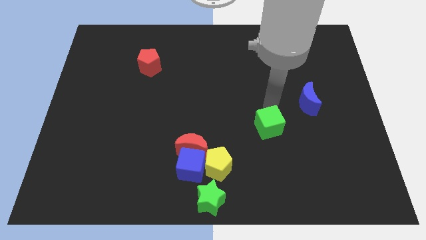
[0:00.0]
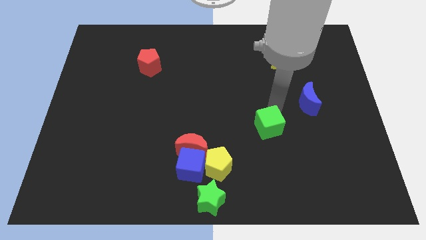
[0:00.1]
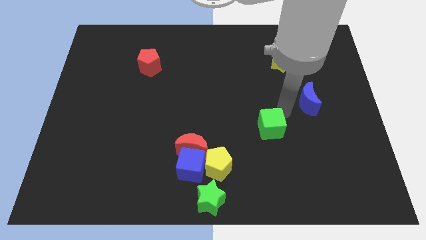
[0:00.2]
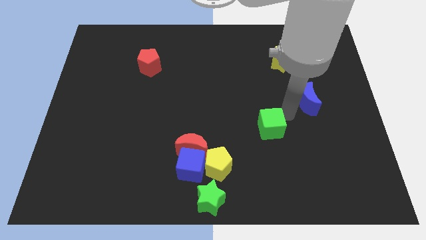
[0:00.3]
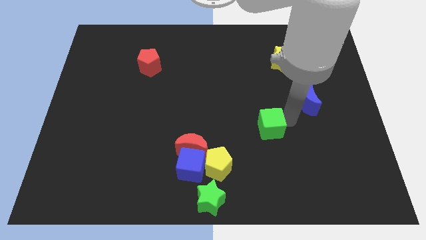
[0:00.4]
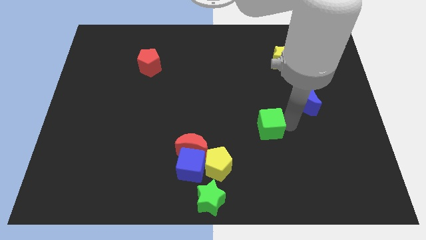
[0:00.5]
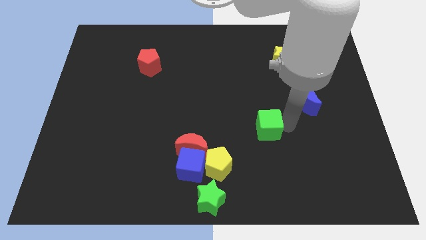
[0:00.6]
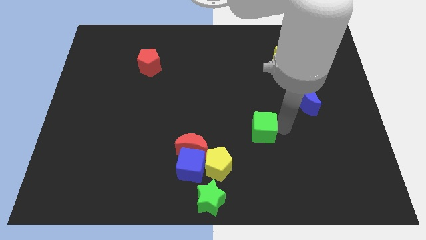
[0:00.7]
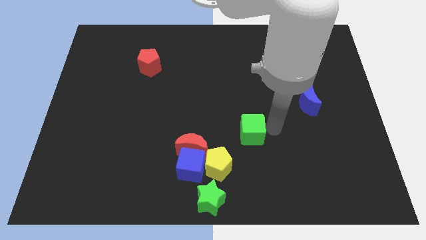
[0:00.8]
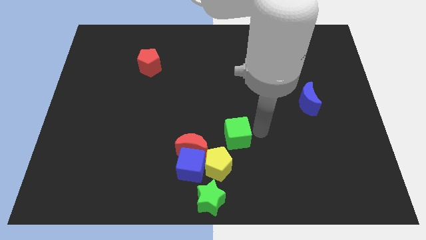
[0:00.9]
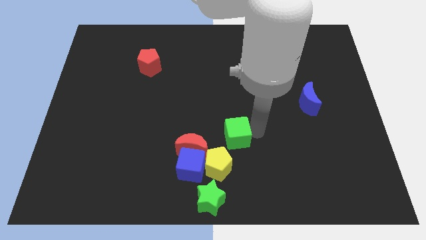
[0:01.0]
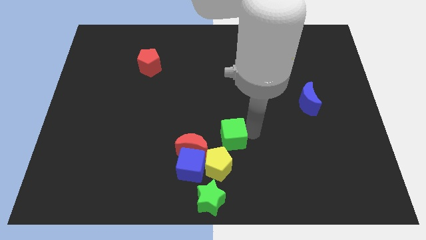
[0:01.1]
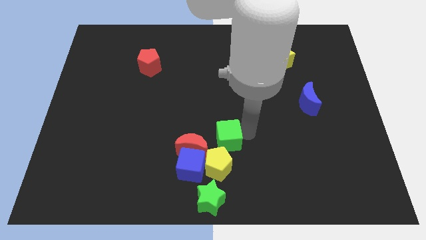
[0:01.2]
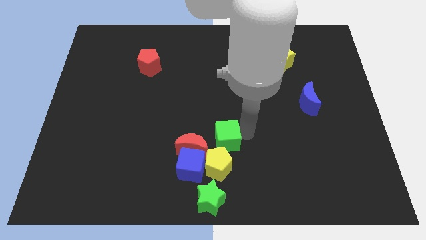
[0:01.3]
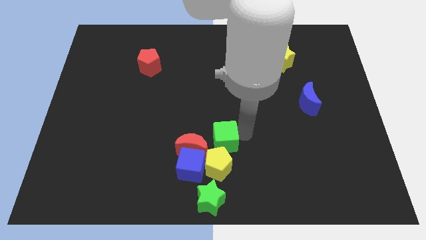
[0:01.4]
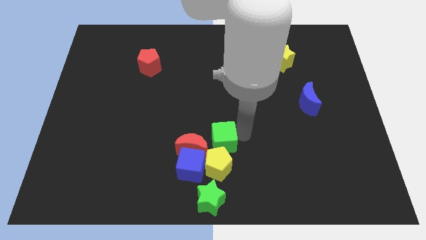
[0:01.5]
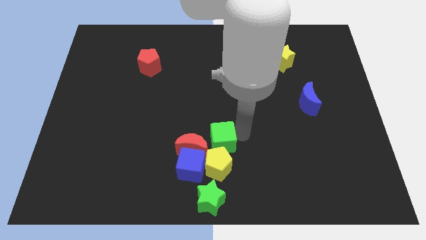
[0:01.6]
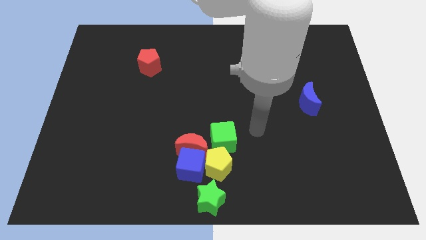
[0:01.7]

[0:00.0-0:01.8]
move the green cube to the top of the yellow pentagon

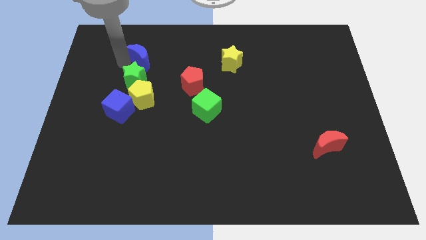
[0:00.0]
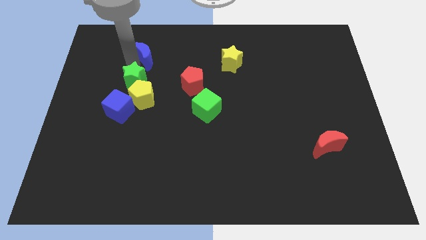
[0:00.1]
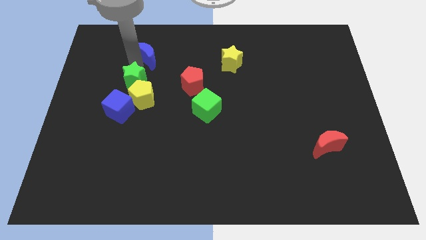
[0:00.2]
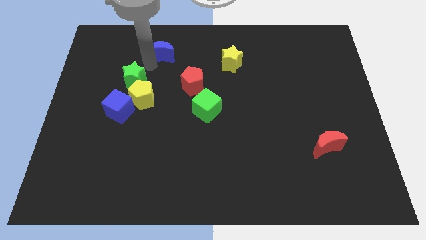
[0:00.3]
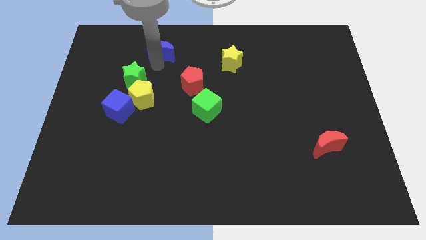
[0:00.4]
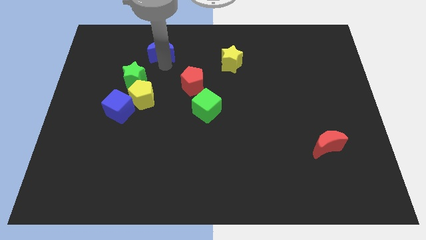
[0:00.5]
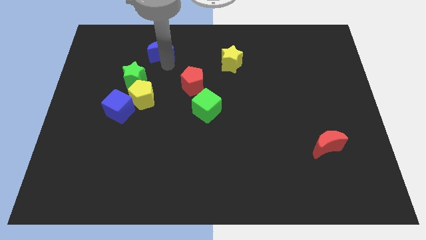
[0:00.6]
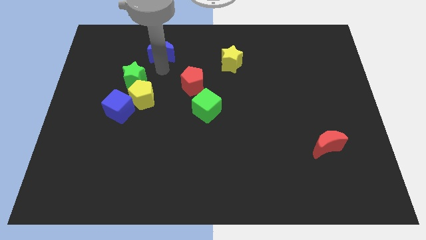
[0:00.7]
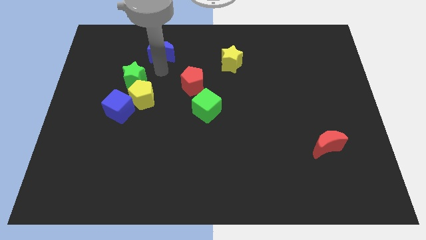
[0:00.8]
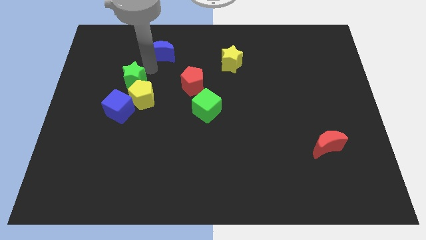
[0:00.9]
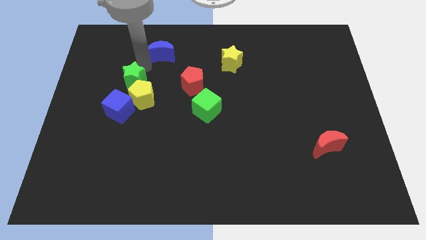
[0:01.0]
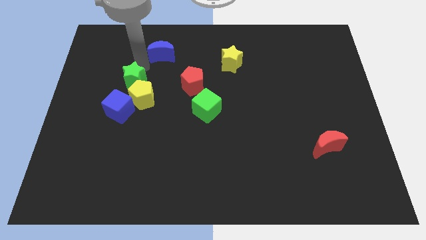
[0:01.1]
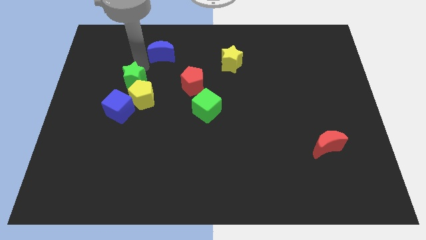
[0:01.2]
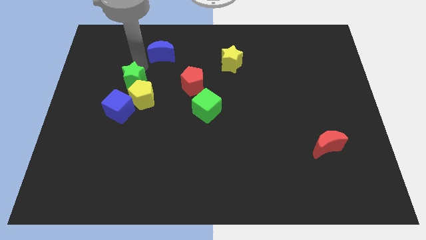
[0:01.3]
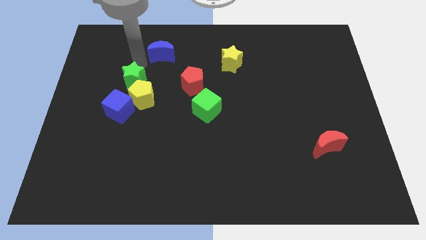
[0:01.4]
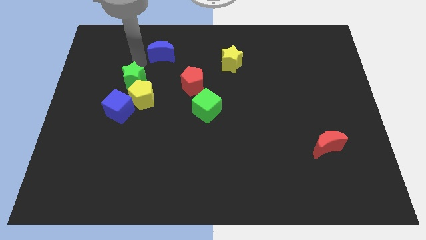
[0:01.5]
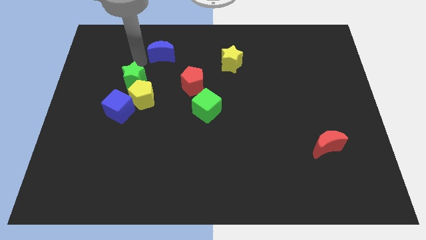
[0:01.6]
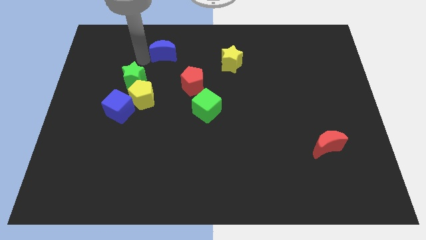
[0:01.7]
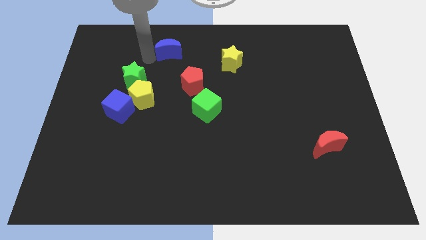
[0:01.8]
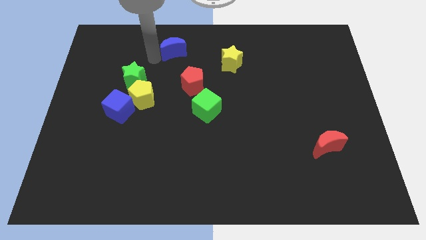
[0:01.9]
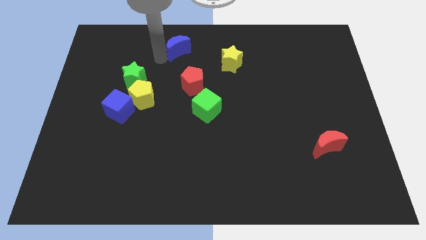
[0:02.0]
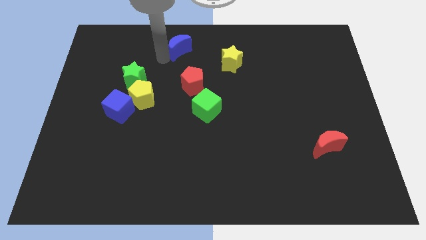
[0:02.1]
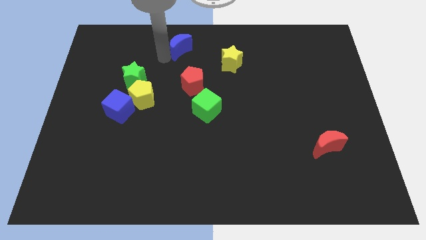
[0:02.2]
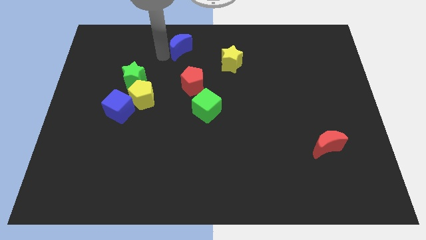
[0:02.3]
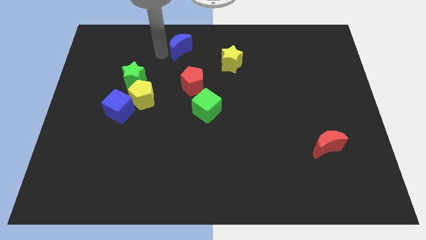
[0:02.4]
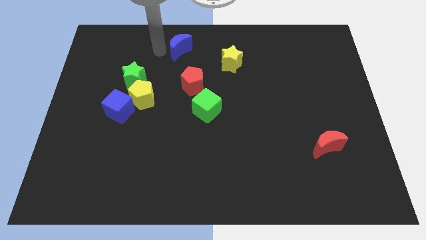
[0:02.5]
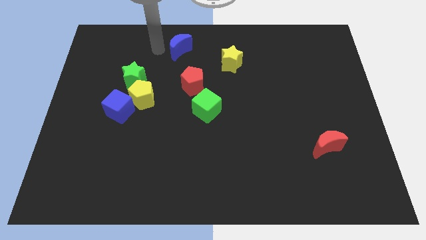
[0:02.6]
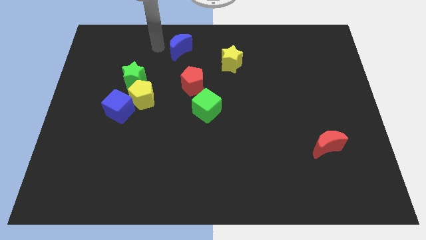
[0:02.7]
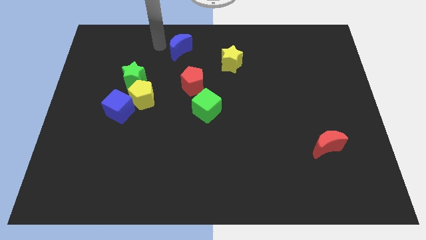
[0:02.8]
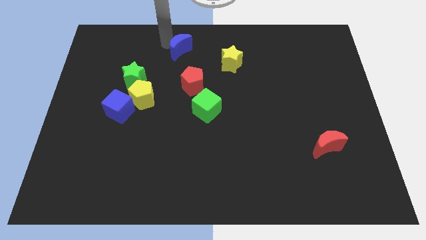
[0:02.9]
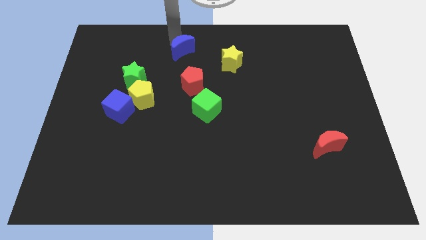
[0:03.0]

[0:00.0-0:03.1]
push blue moon to the top center

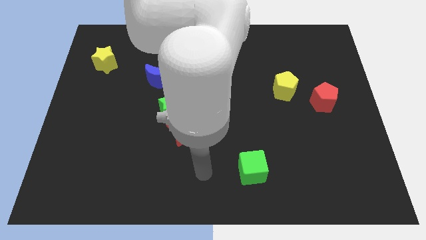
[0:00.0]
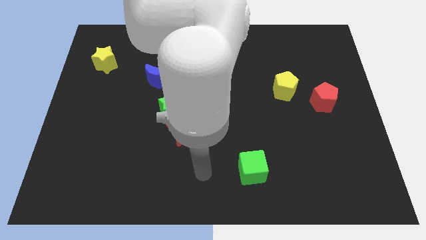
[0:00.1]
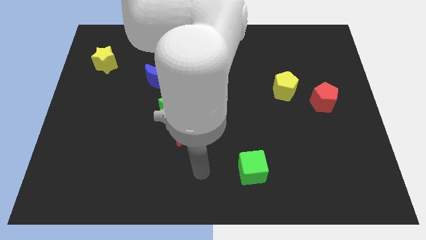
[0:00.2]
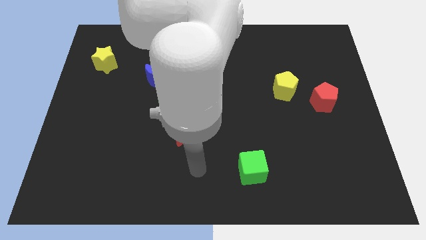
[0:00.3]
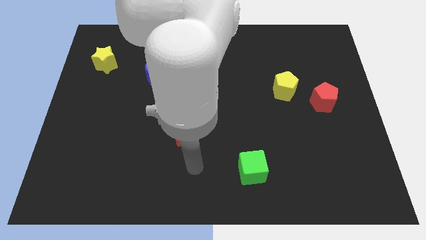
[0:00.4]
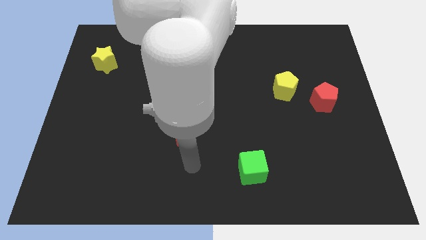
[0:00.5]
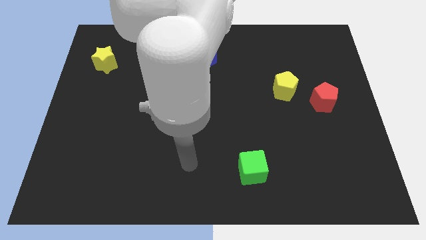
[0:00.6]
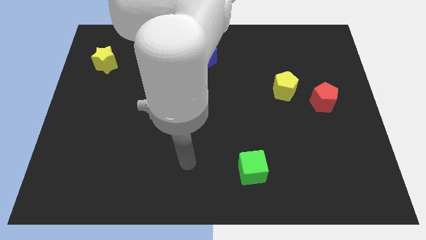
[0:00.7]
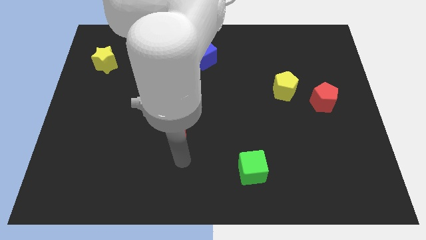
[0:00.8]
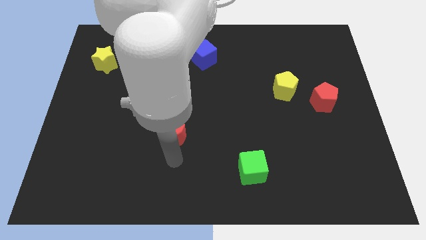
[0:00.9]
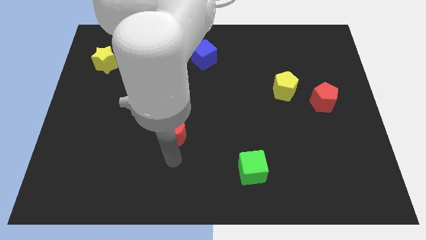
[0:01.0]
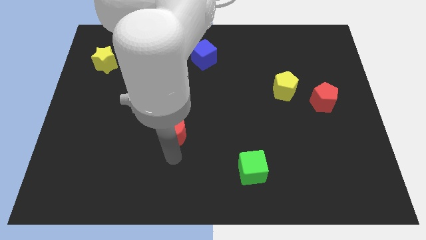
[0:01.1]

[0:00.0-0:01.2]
point your arm at the bottom side of the red crescent

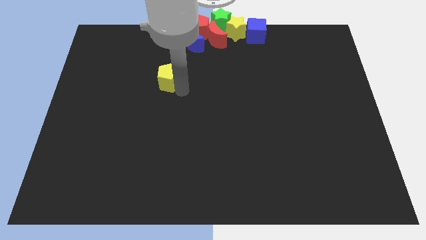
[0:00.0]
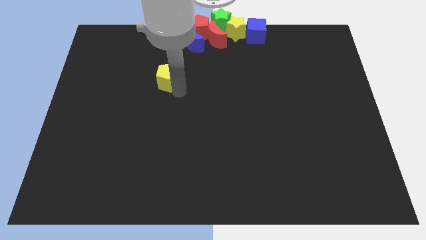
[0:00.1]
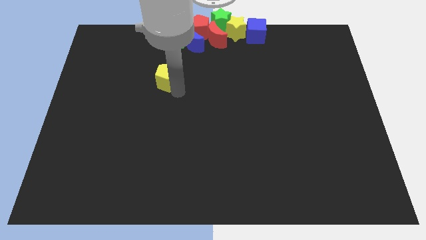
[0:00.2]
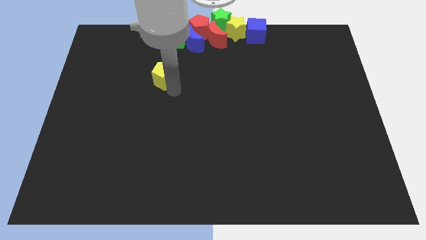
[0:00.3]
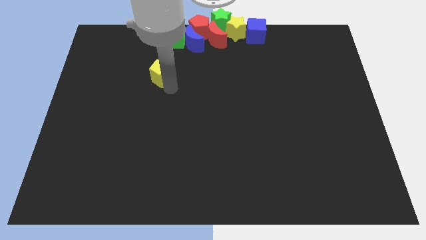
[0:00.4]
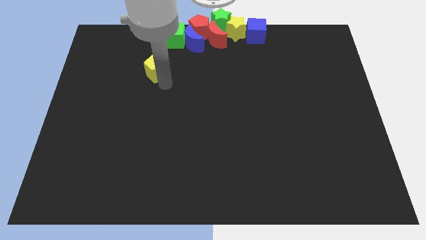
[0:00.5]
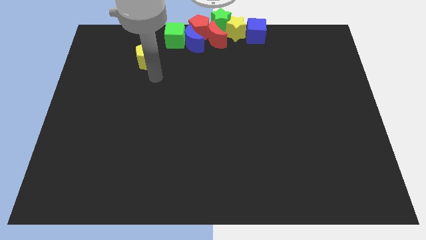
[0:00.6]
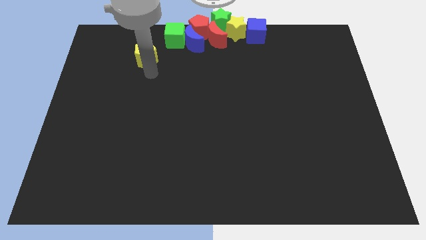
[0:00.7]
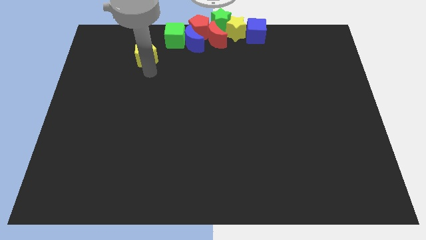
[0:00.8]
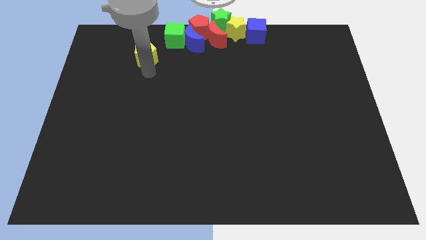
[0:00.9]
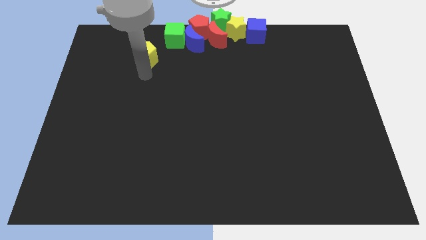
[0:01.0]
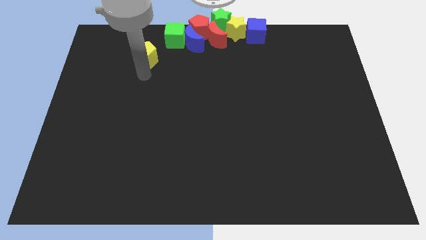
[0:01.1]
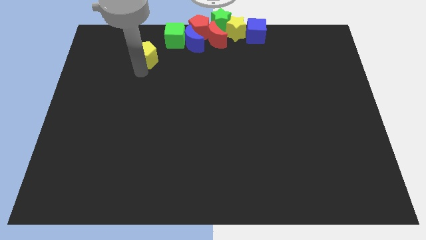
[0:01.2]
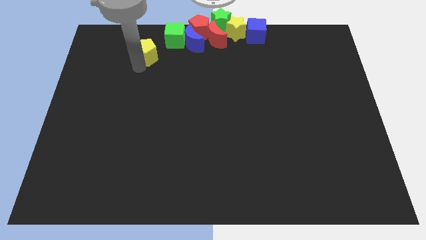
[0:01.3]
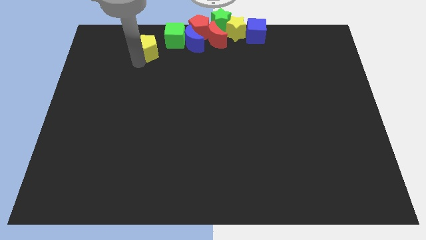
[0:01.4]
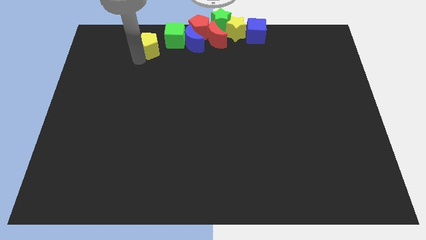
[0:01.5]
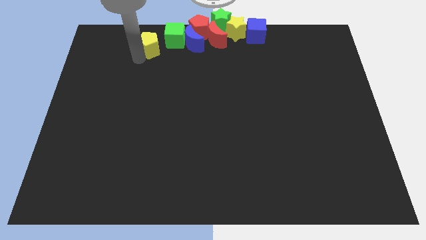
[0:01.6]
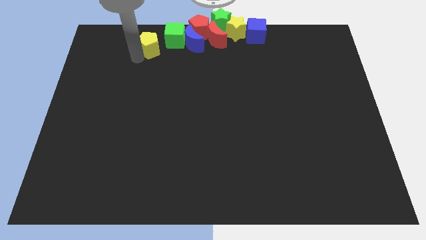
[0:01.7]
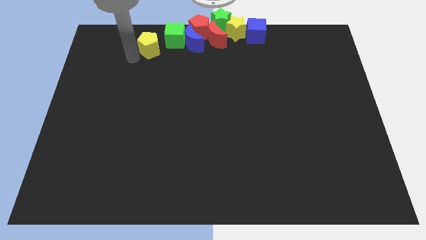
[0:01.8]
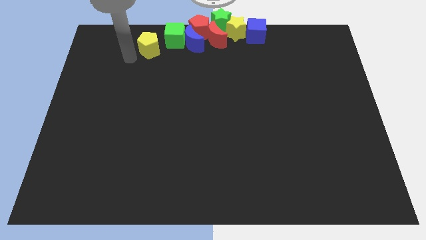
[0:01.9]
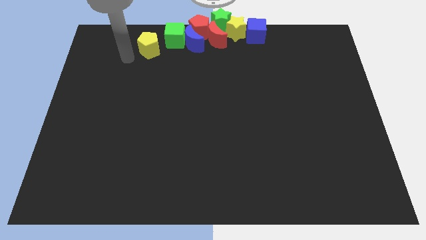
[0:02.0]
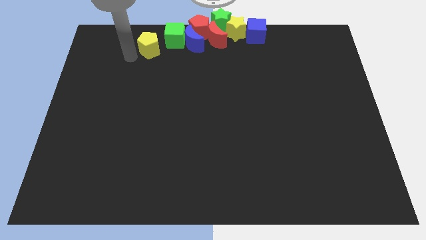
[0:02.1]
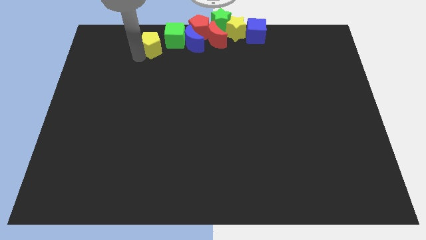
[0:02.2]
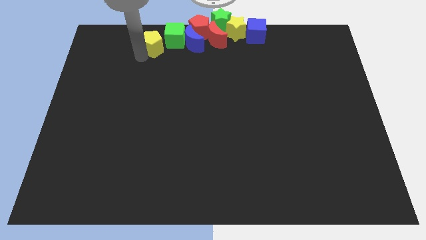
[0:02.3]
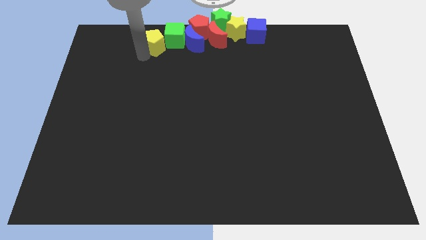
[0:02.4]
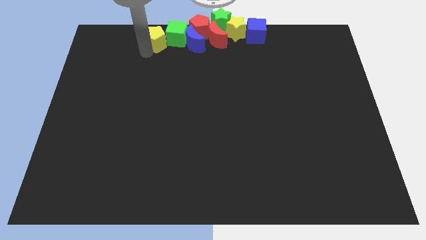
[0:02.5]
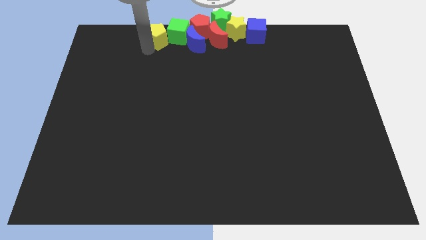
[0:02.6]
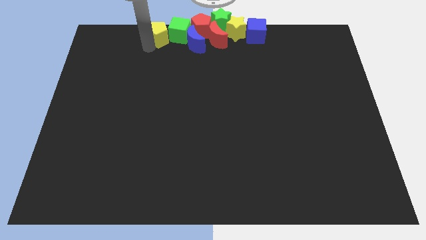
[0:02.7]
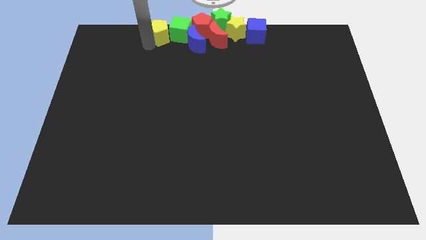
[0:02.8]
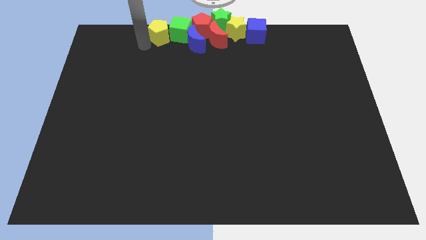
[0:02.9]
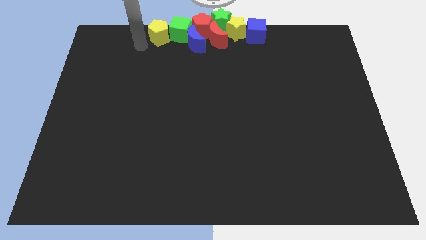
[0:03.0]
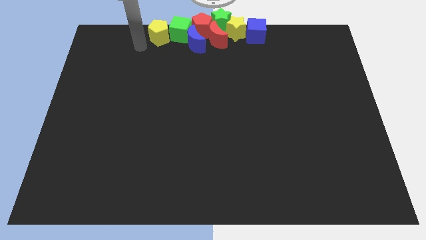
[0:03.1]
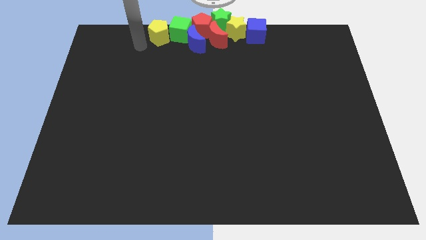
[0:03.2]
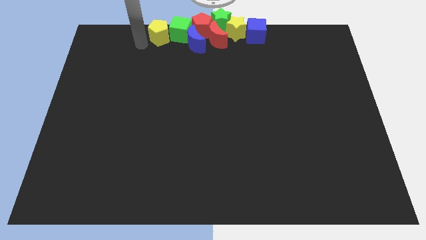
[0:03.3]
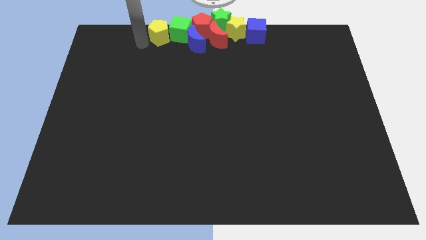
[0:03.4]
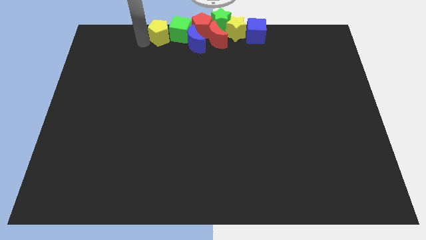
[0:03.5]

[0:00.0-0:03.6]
push the yellow pentagon into blocks
